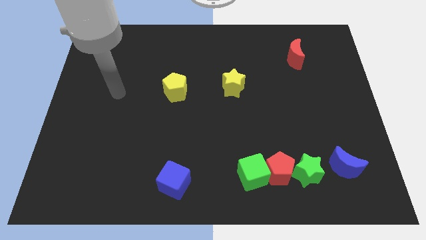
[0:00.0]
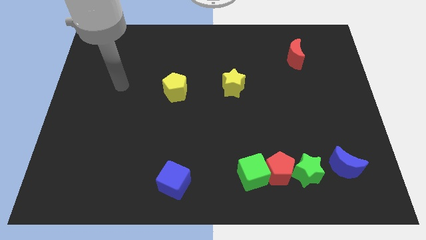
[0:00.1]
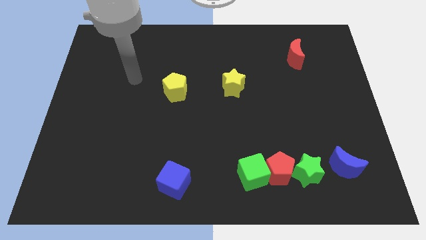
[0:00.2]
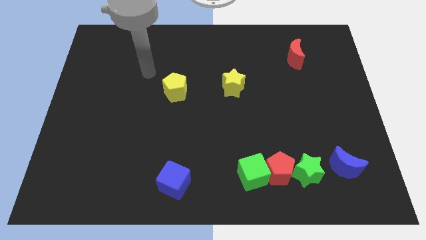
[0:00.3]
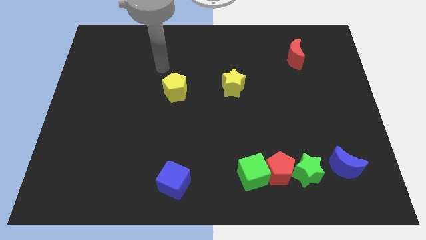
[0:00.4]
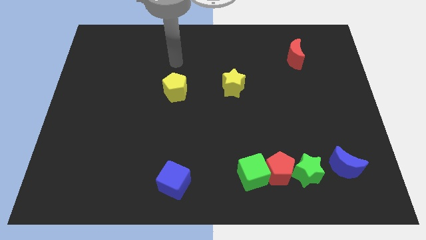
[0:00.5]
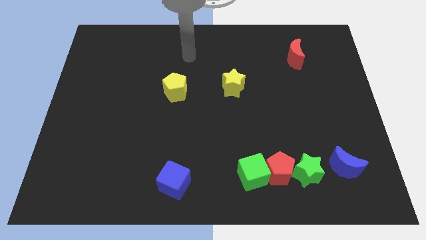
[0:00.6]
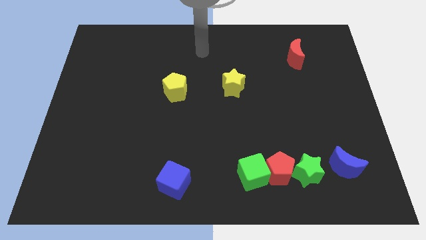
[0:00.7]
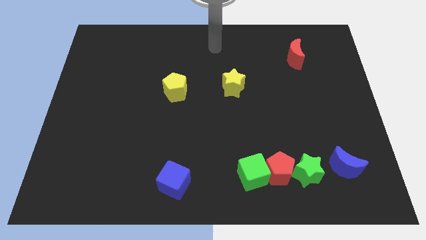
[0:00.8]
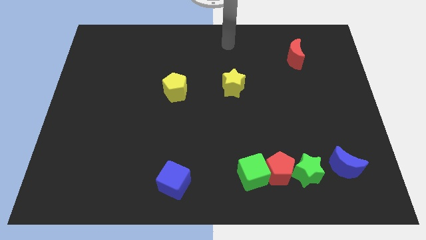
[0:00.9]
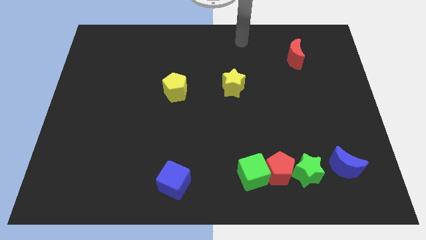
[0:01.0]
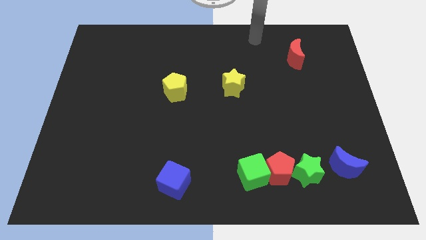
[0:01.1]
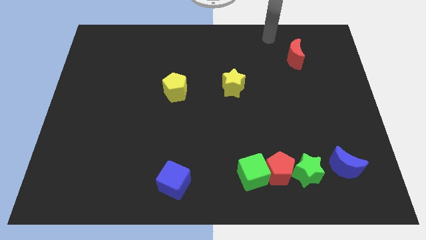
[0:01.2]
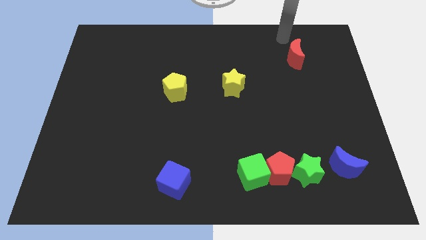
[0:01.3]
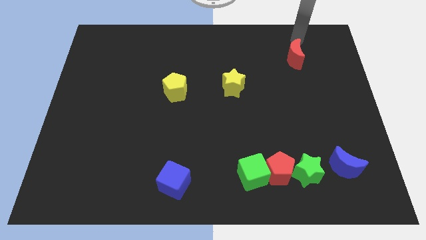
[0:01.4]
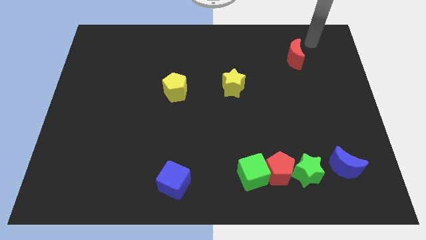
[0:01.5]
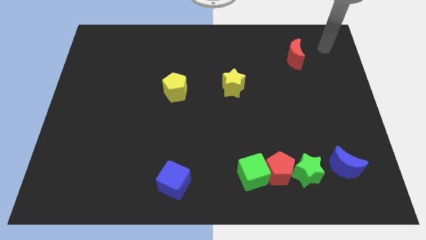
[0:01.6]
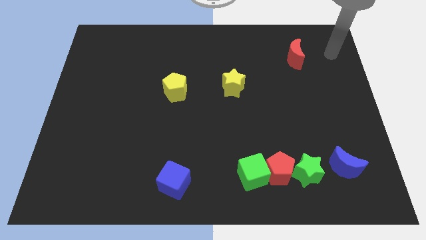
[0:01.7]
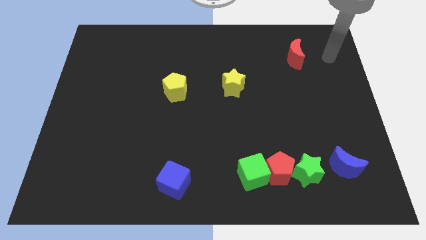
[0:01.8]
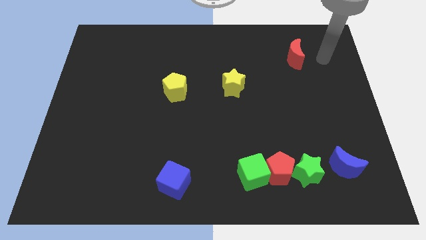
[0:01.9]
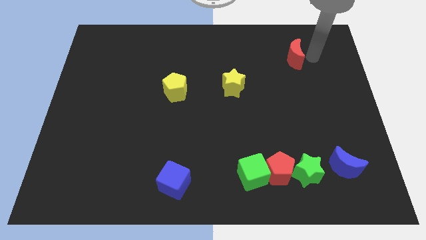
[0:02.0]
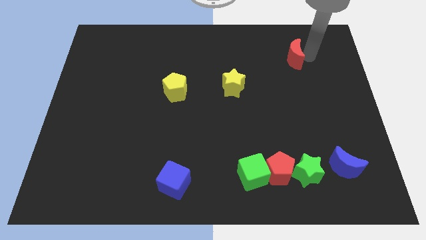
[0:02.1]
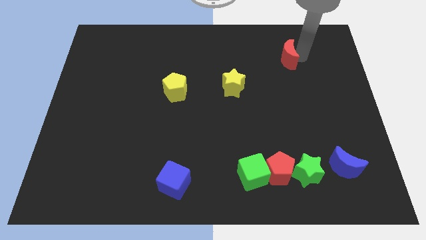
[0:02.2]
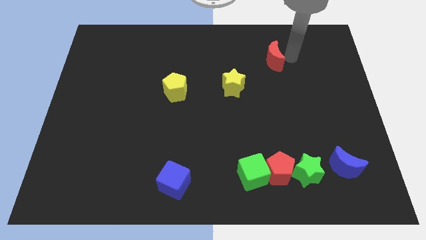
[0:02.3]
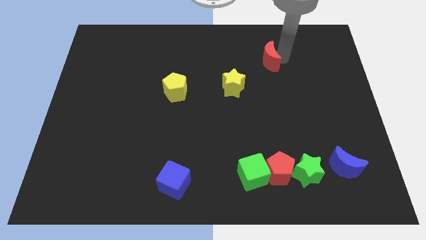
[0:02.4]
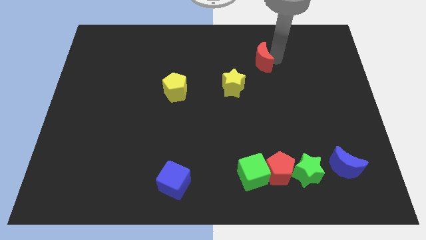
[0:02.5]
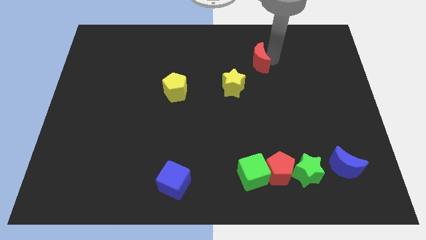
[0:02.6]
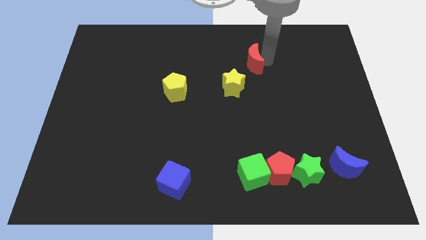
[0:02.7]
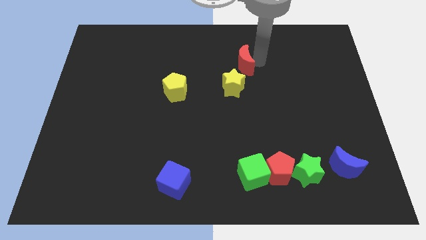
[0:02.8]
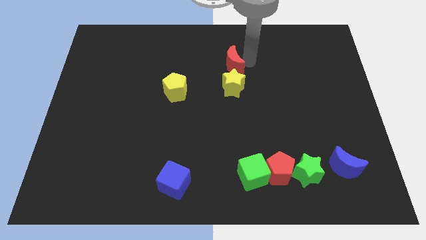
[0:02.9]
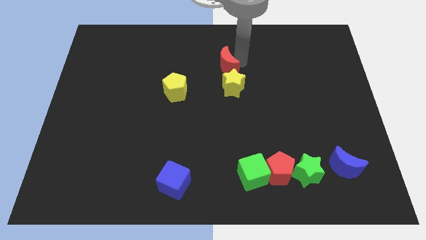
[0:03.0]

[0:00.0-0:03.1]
push the red crescent at the top of the yellow star

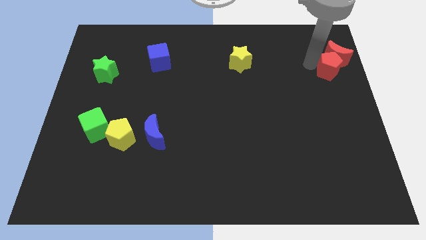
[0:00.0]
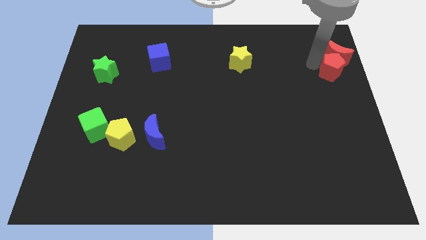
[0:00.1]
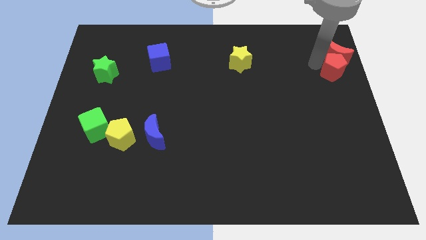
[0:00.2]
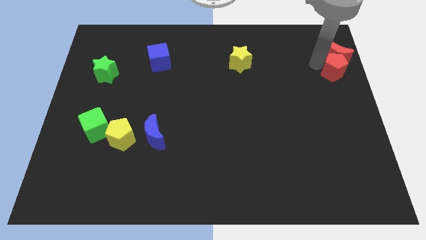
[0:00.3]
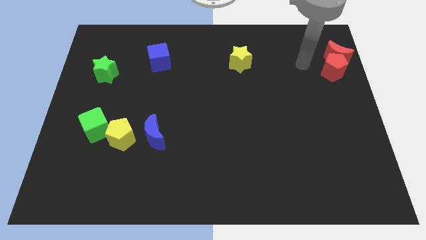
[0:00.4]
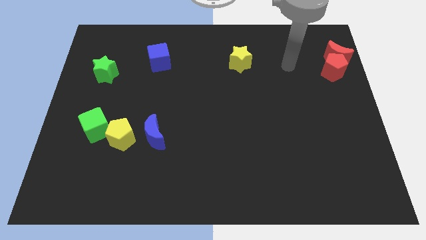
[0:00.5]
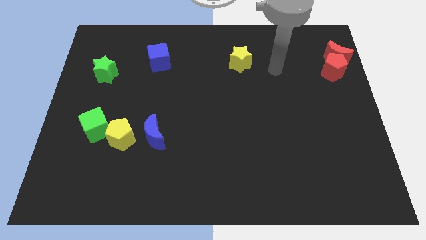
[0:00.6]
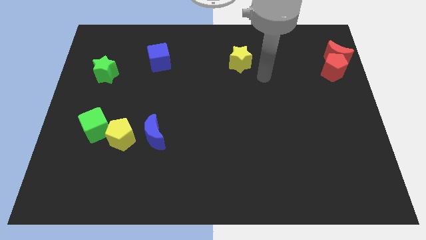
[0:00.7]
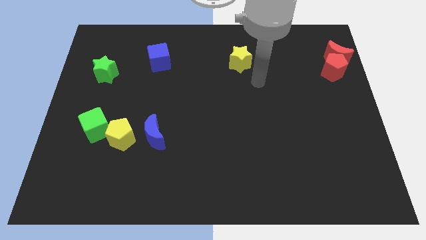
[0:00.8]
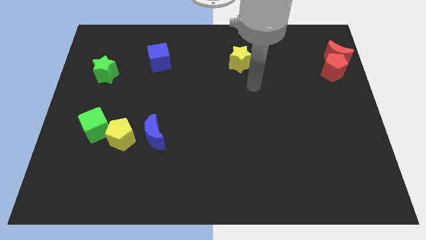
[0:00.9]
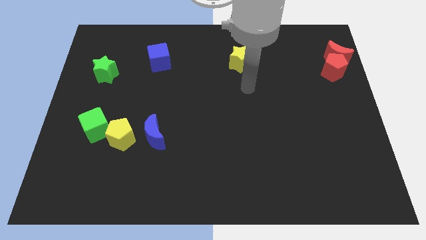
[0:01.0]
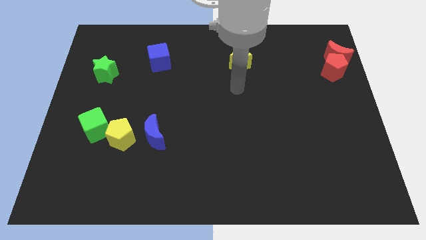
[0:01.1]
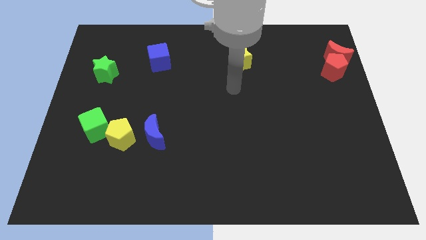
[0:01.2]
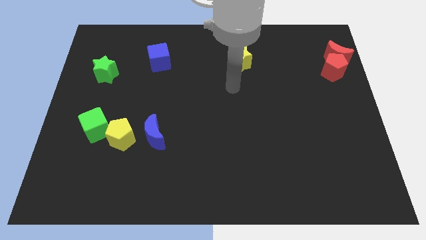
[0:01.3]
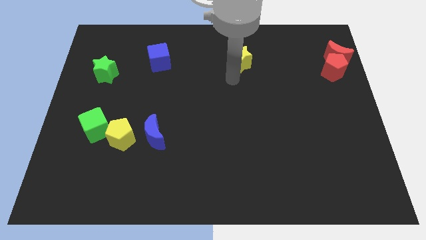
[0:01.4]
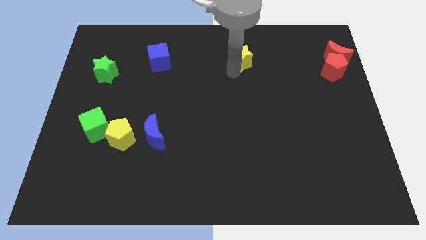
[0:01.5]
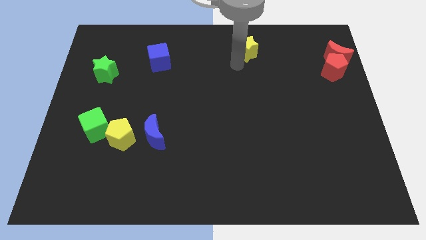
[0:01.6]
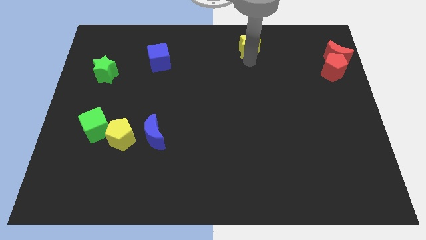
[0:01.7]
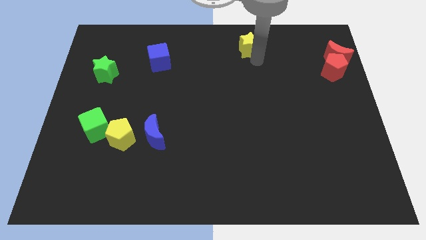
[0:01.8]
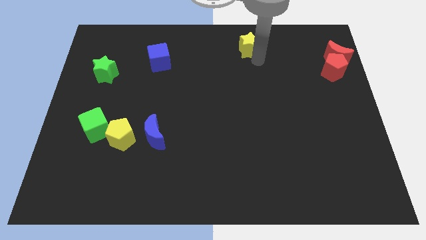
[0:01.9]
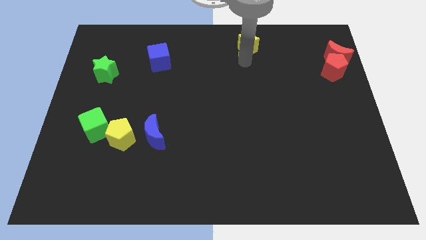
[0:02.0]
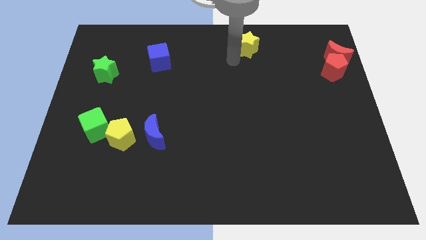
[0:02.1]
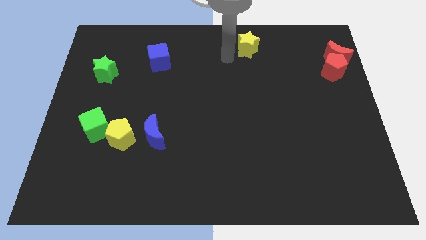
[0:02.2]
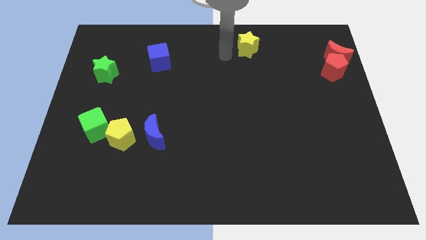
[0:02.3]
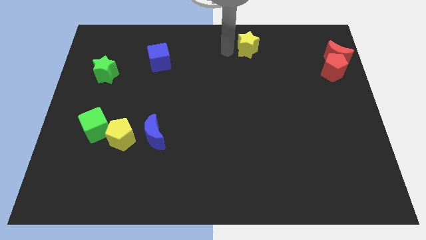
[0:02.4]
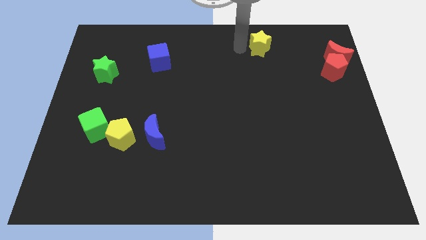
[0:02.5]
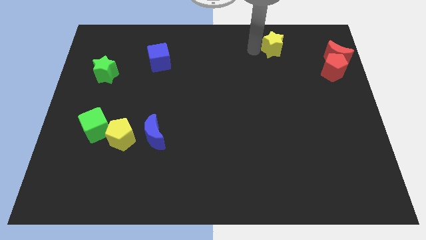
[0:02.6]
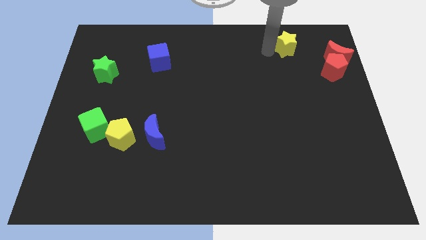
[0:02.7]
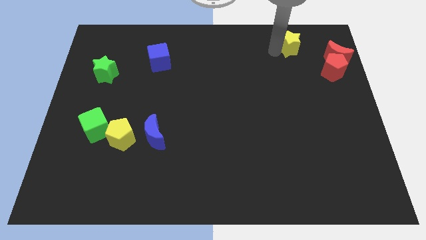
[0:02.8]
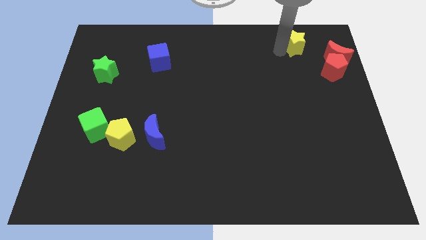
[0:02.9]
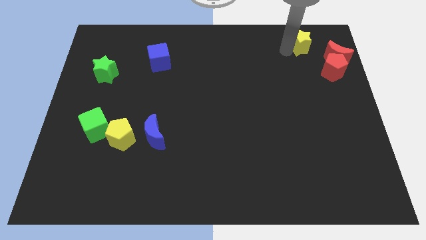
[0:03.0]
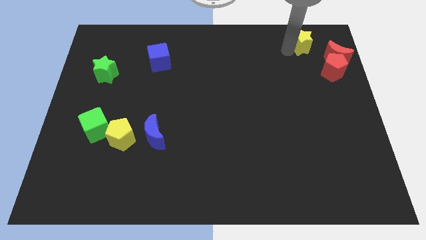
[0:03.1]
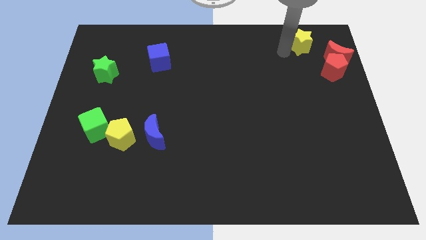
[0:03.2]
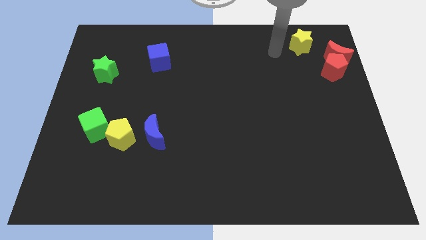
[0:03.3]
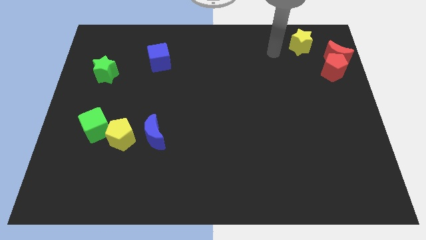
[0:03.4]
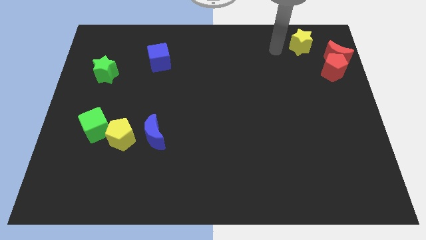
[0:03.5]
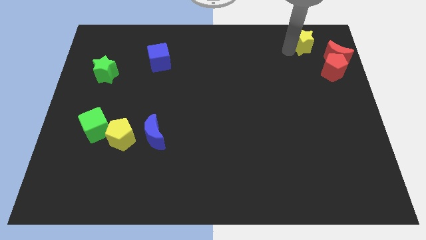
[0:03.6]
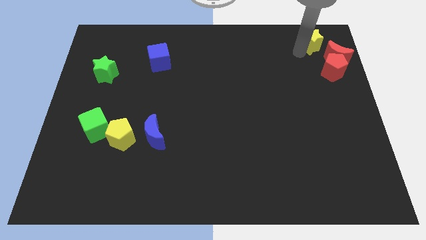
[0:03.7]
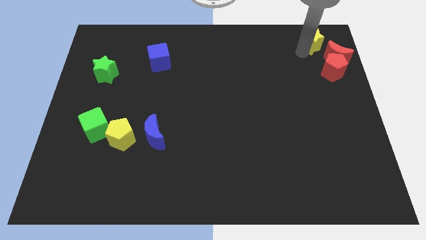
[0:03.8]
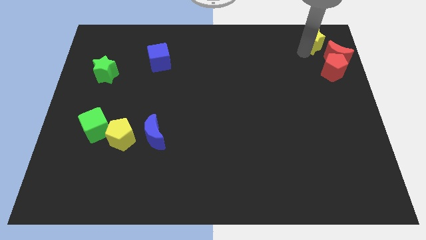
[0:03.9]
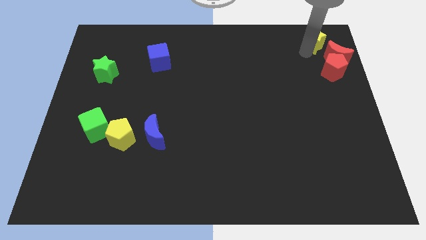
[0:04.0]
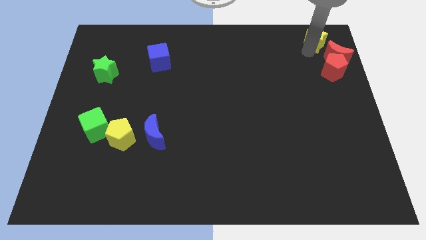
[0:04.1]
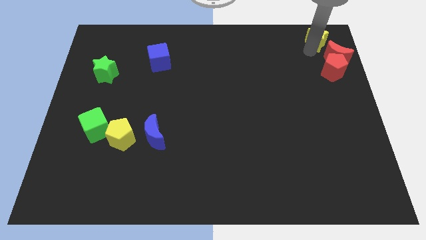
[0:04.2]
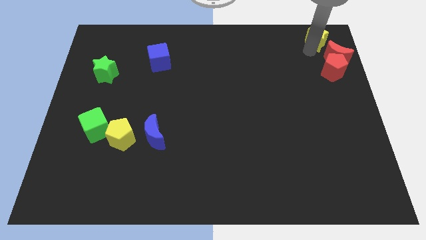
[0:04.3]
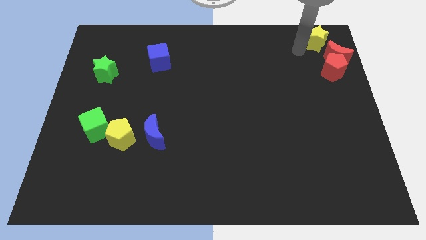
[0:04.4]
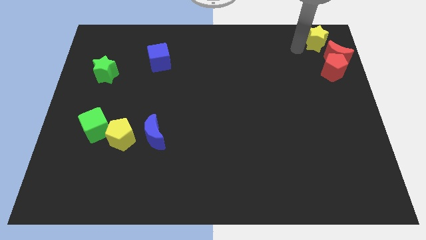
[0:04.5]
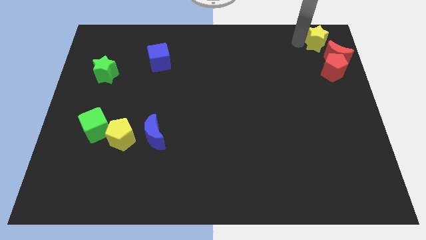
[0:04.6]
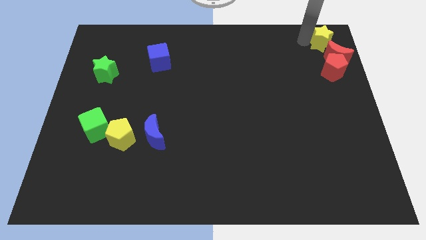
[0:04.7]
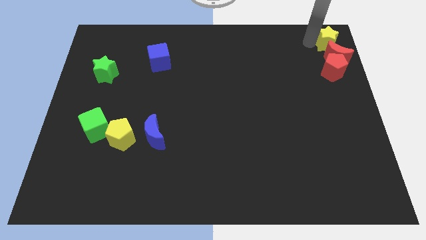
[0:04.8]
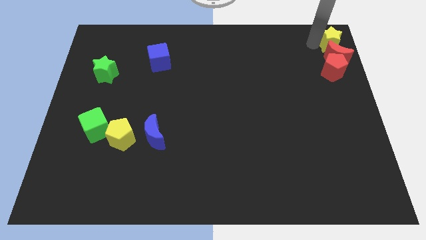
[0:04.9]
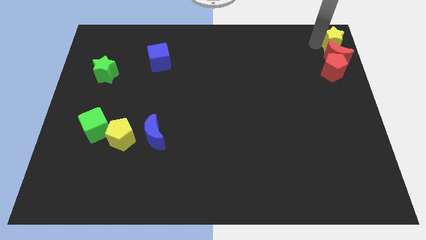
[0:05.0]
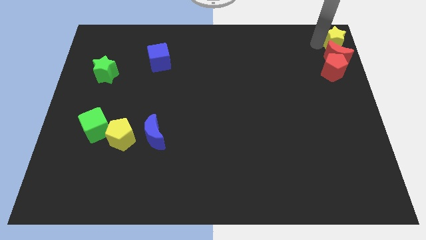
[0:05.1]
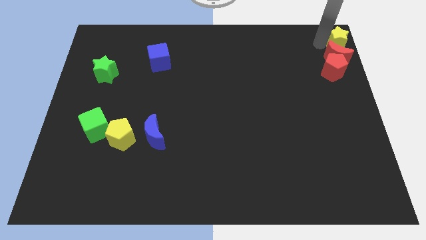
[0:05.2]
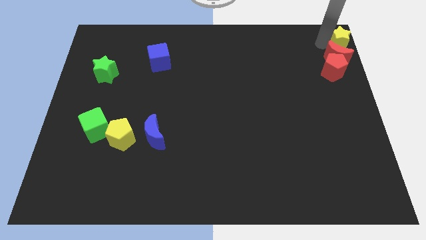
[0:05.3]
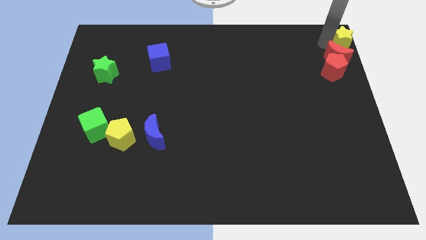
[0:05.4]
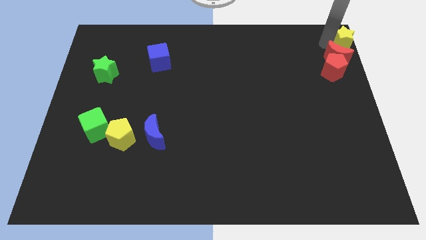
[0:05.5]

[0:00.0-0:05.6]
place yellow star to the top right corner of the board

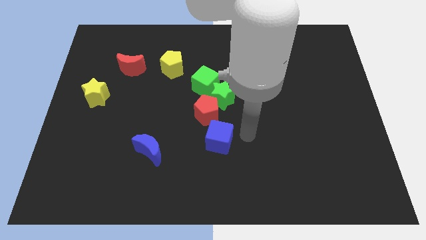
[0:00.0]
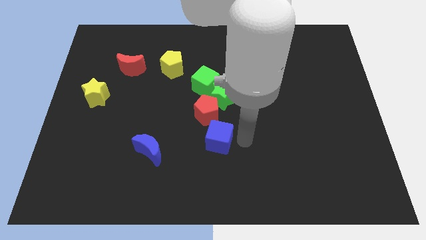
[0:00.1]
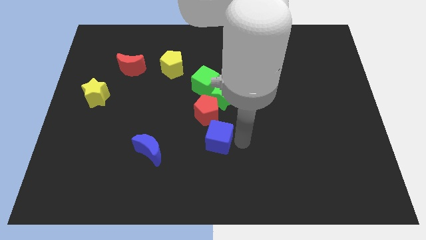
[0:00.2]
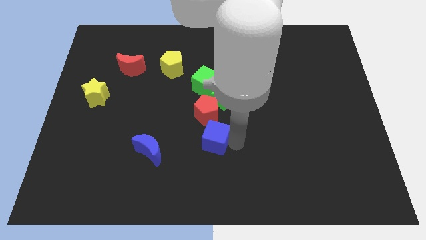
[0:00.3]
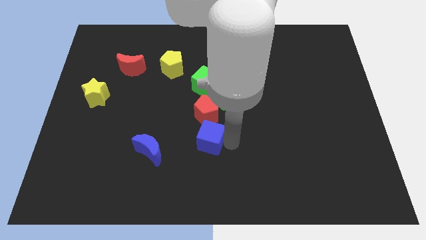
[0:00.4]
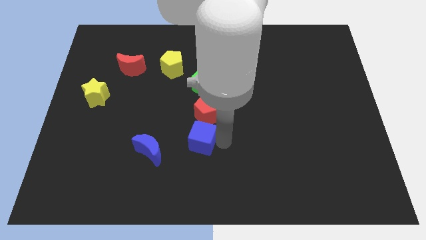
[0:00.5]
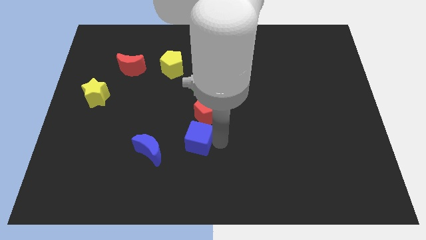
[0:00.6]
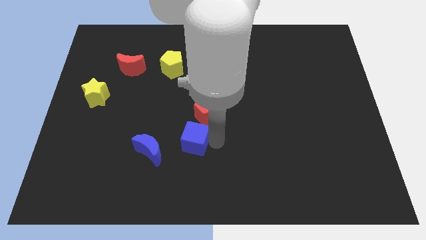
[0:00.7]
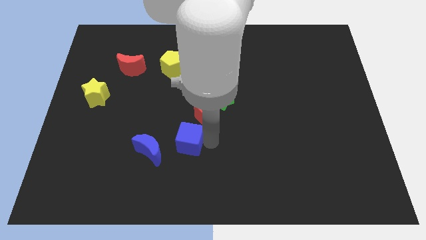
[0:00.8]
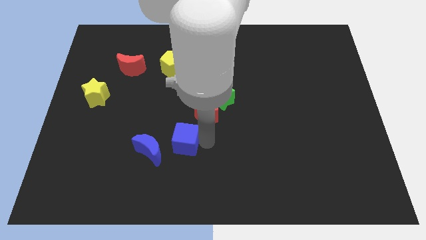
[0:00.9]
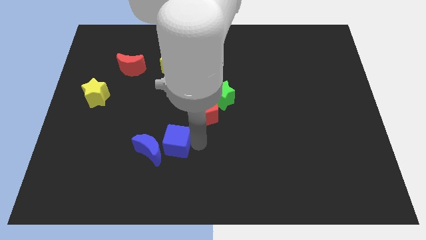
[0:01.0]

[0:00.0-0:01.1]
slide blue cube close to blue moon
